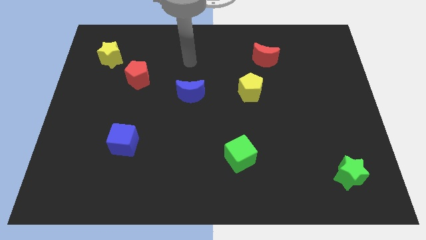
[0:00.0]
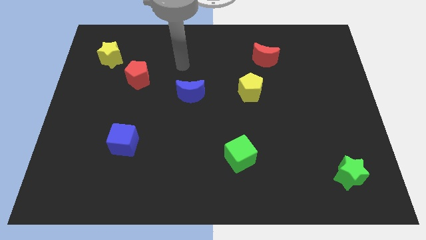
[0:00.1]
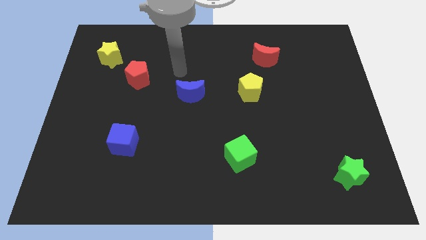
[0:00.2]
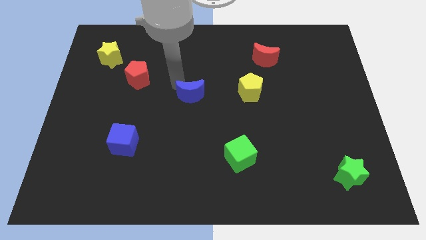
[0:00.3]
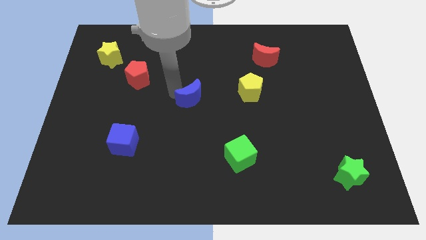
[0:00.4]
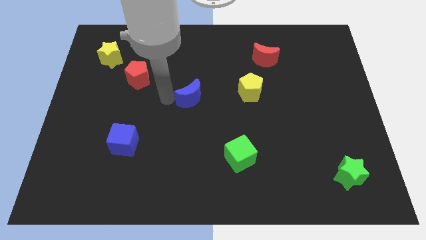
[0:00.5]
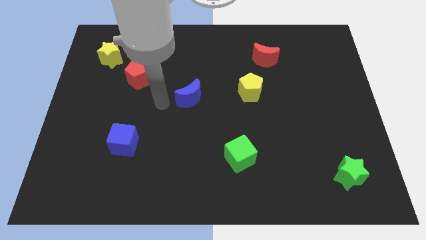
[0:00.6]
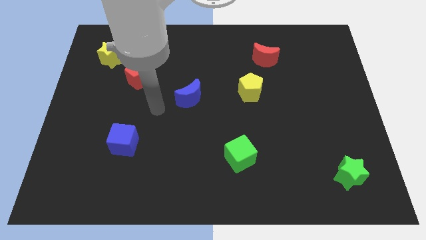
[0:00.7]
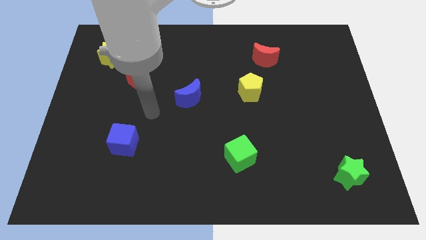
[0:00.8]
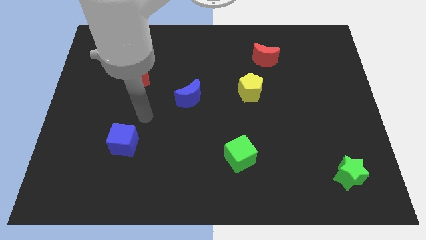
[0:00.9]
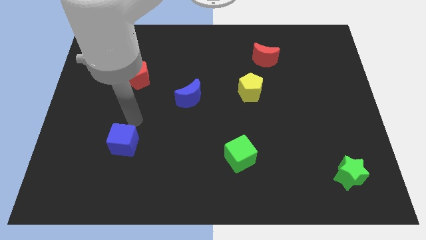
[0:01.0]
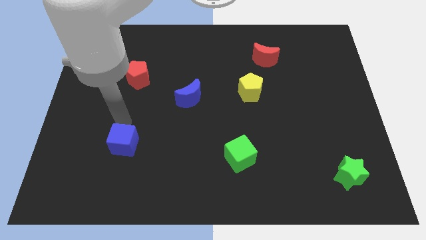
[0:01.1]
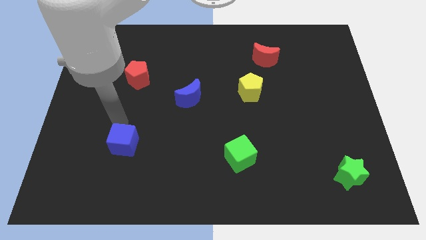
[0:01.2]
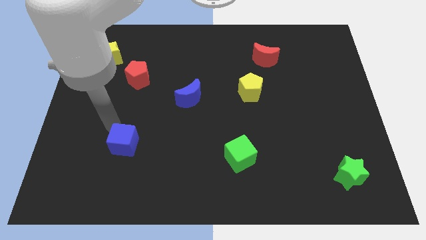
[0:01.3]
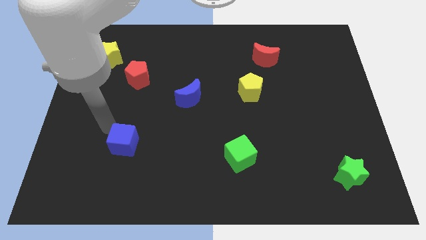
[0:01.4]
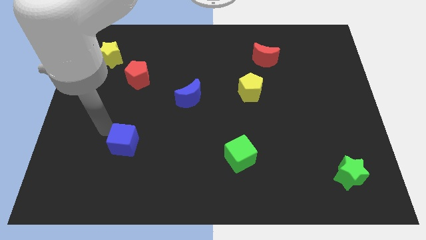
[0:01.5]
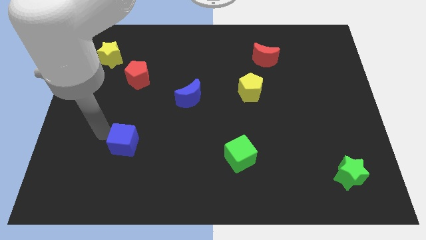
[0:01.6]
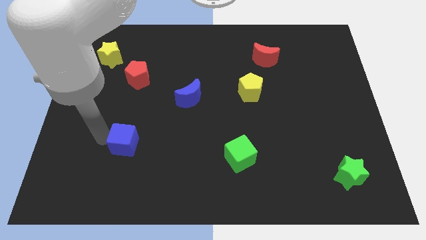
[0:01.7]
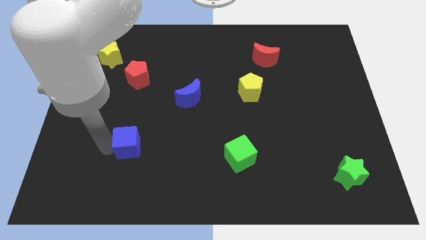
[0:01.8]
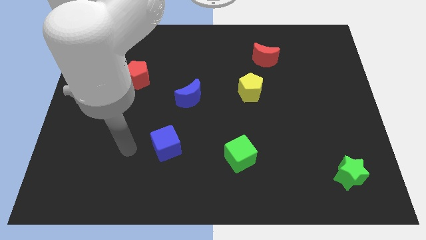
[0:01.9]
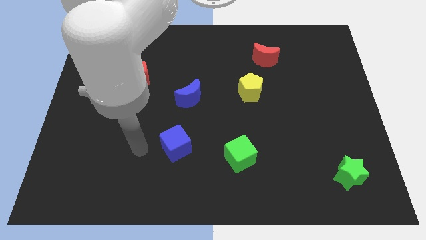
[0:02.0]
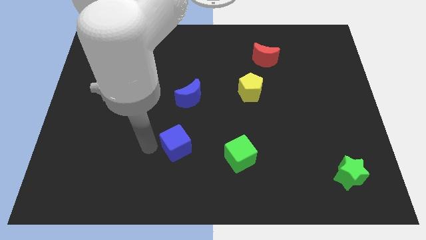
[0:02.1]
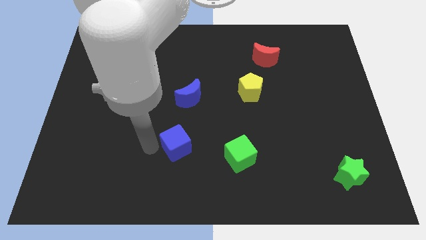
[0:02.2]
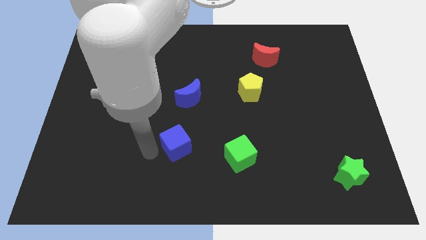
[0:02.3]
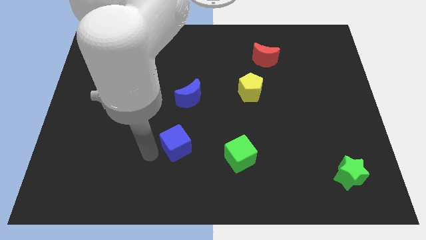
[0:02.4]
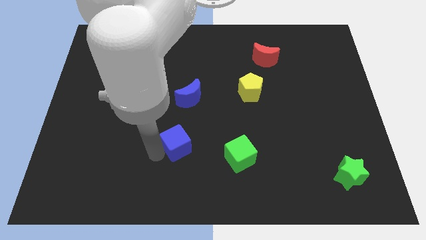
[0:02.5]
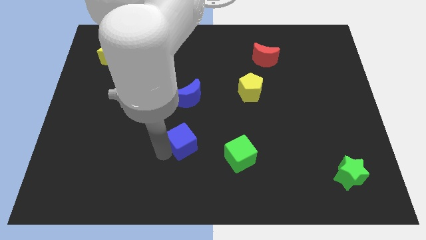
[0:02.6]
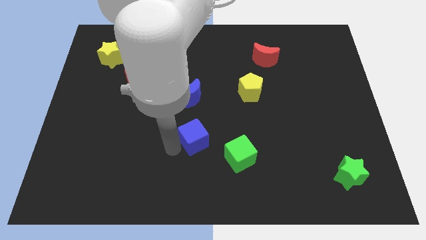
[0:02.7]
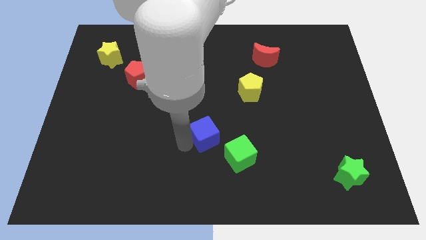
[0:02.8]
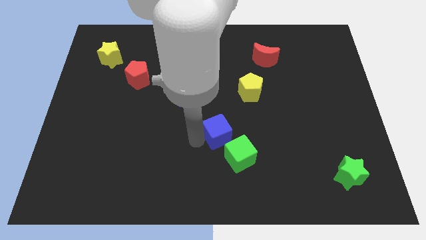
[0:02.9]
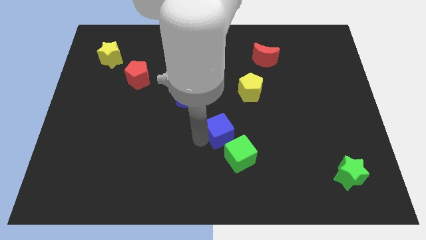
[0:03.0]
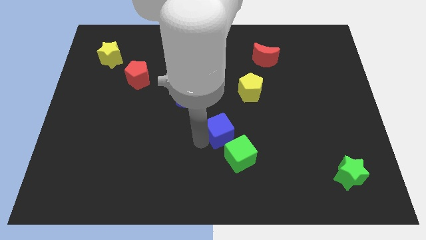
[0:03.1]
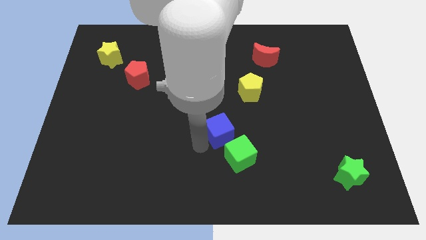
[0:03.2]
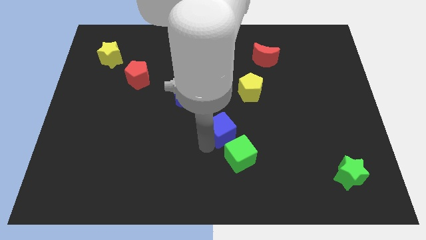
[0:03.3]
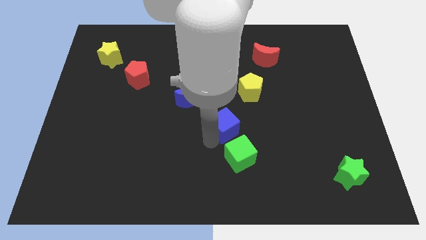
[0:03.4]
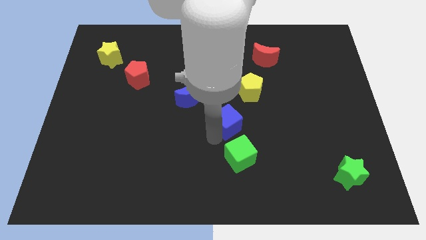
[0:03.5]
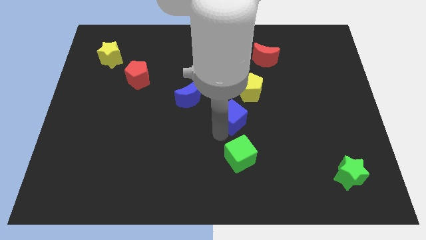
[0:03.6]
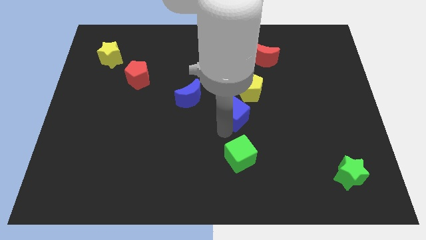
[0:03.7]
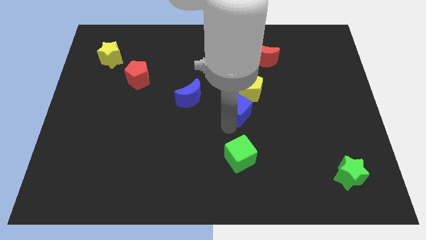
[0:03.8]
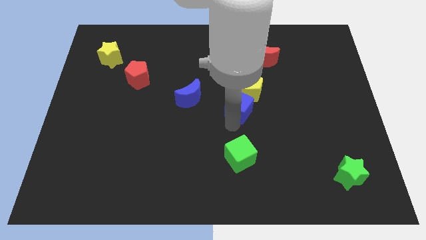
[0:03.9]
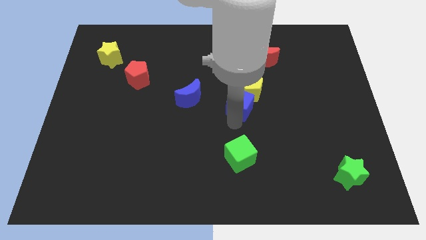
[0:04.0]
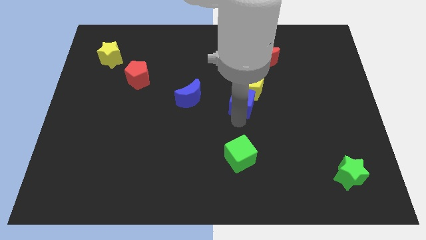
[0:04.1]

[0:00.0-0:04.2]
put the blue cube close to the yellow pentagon

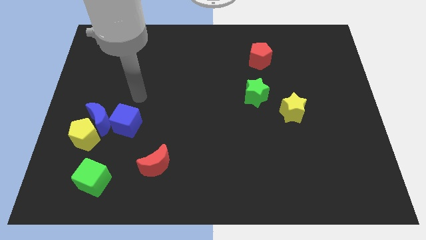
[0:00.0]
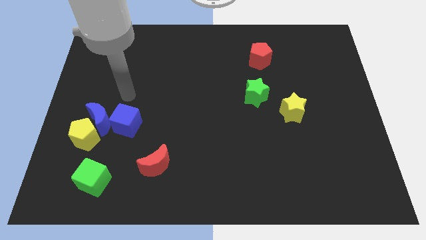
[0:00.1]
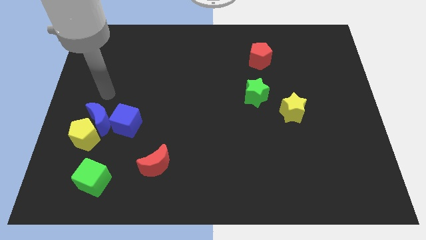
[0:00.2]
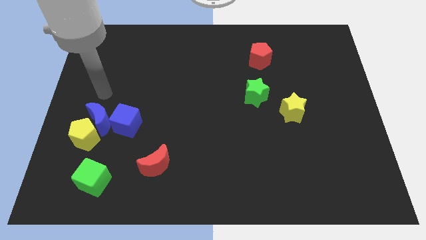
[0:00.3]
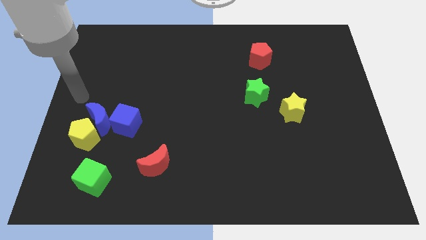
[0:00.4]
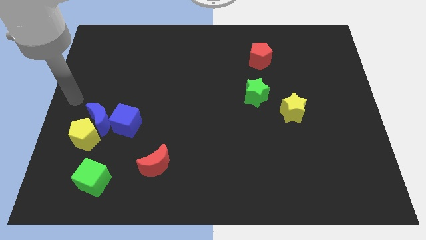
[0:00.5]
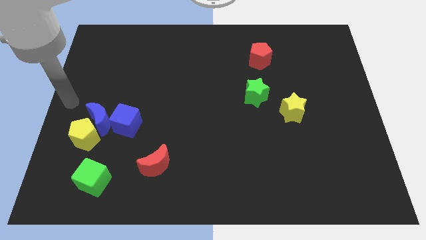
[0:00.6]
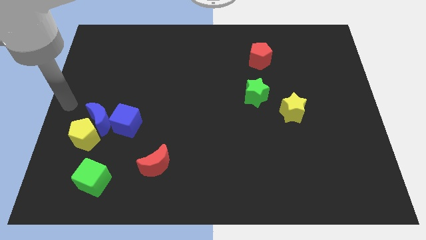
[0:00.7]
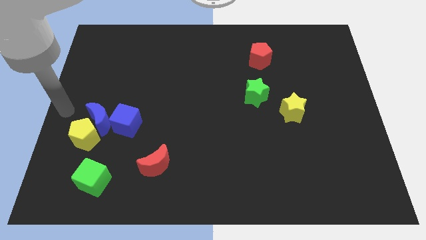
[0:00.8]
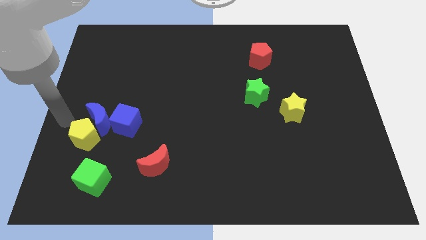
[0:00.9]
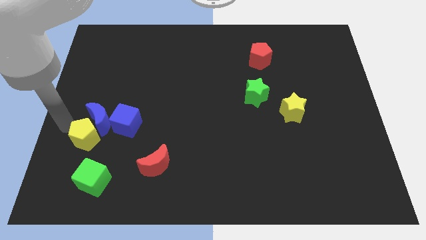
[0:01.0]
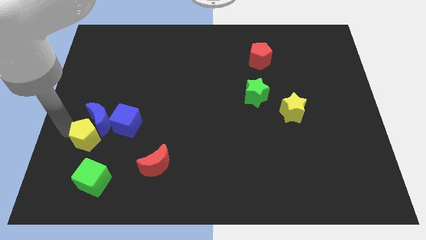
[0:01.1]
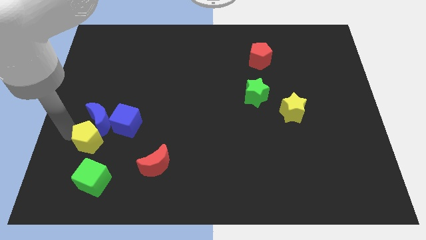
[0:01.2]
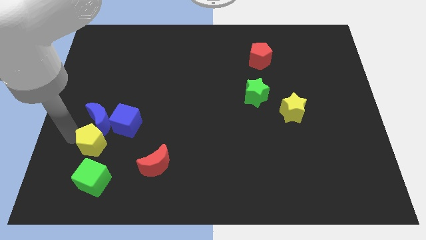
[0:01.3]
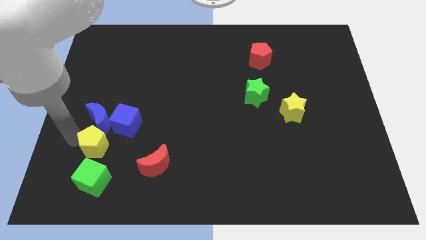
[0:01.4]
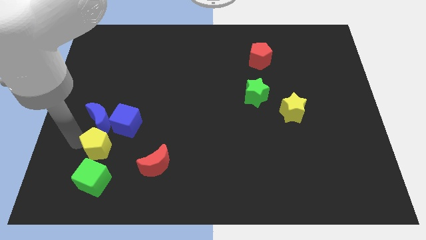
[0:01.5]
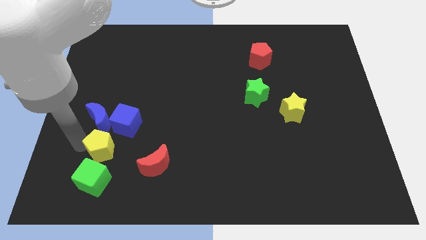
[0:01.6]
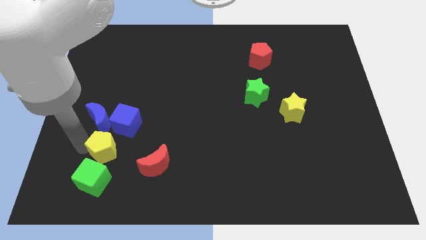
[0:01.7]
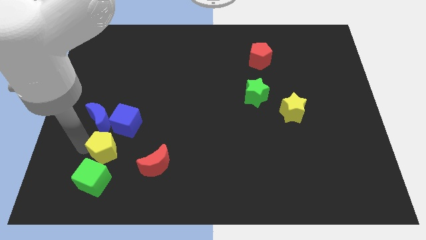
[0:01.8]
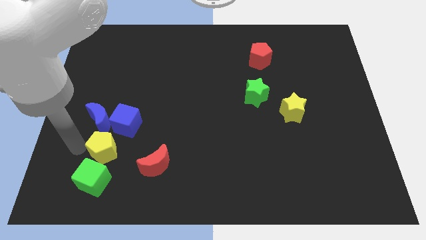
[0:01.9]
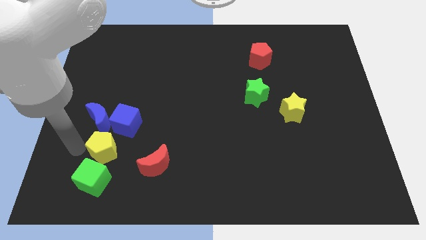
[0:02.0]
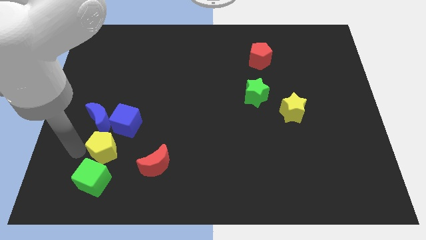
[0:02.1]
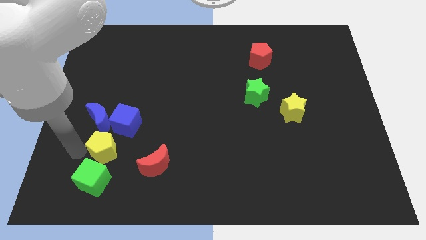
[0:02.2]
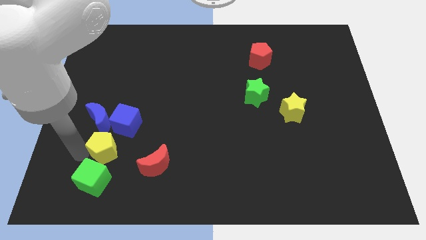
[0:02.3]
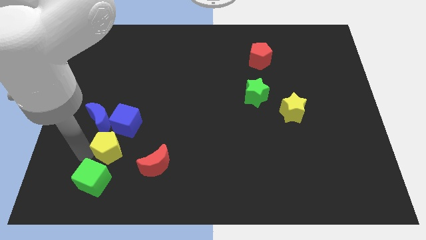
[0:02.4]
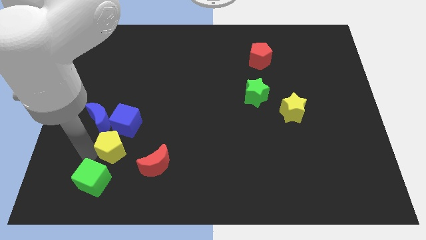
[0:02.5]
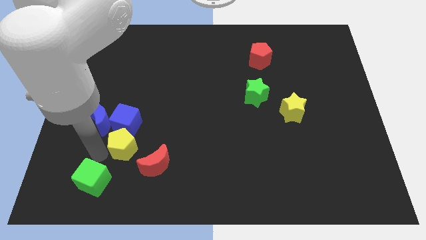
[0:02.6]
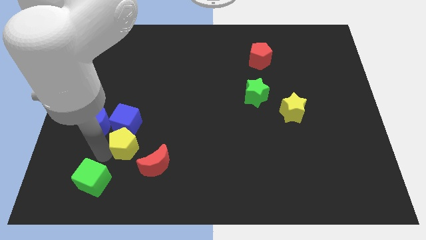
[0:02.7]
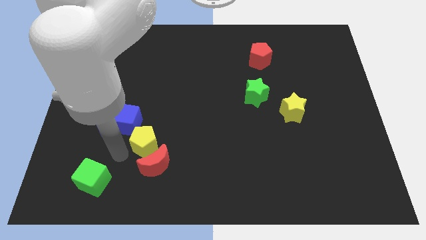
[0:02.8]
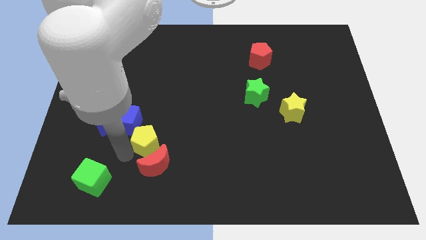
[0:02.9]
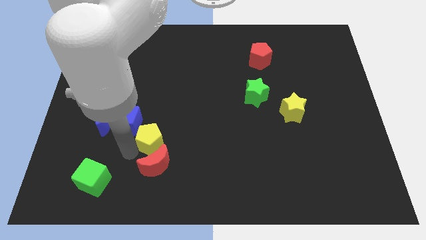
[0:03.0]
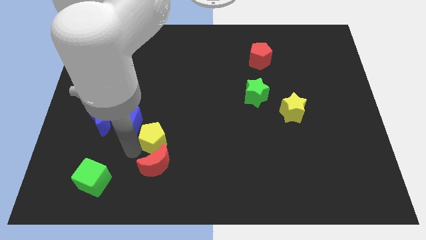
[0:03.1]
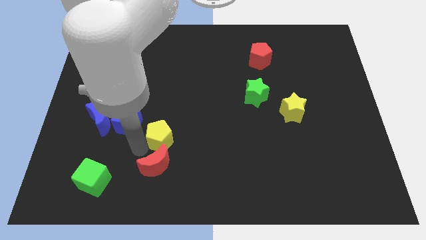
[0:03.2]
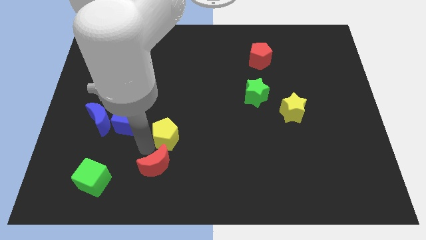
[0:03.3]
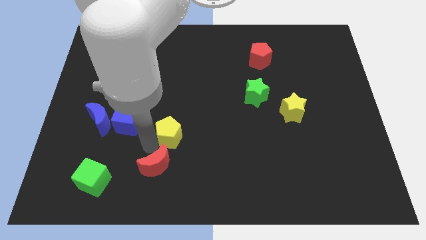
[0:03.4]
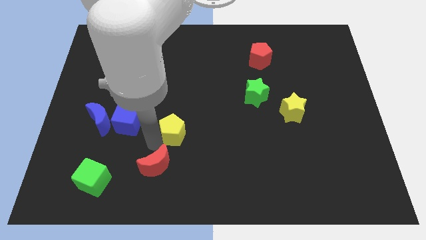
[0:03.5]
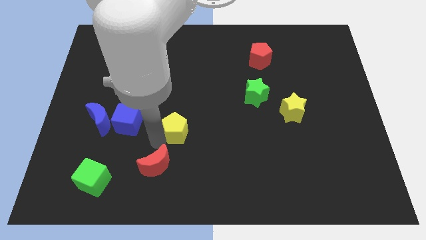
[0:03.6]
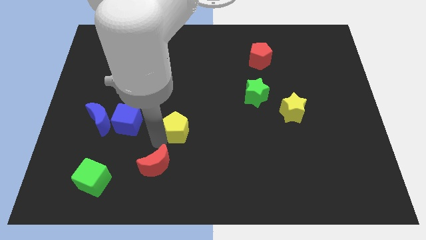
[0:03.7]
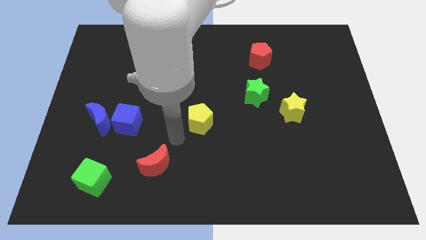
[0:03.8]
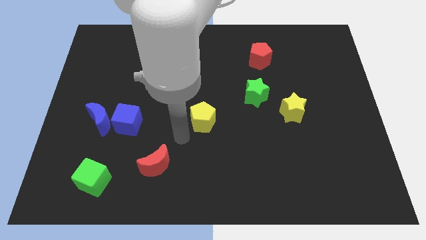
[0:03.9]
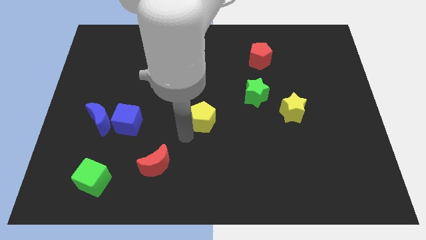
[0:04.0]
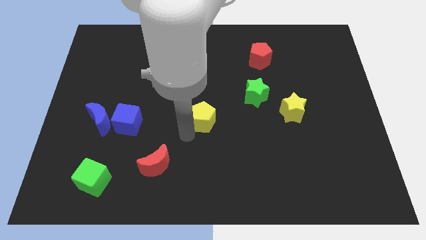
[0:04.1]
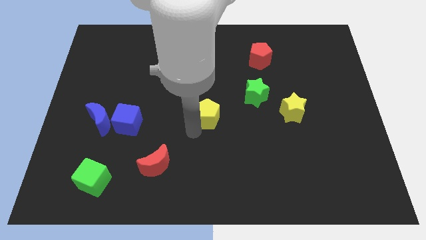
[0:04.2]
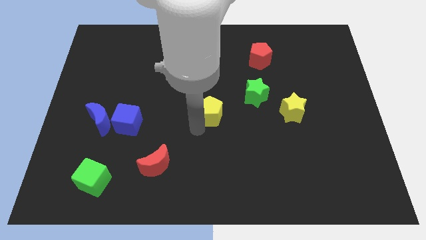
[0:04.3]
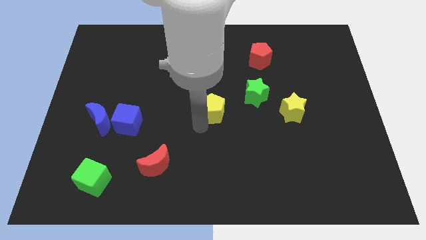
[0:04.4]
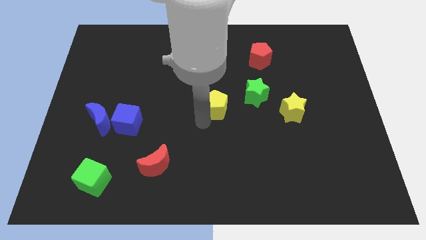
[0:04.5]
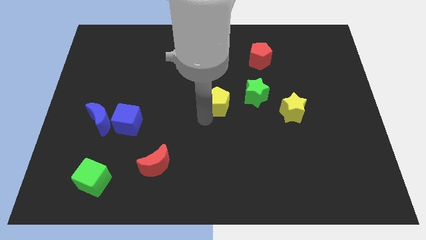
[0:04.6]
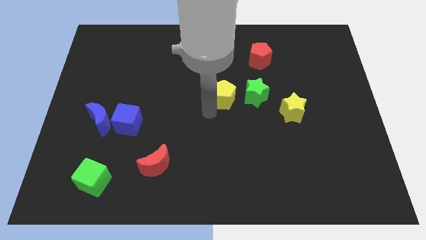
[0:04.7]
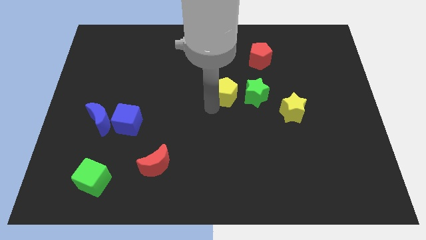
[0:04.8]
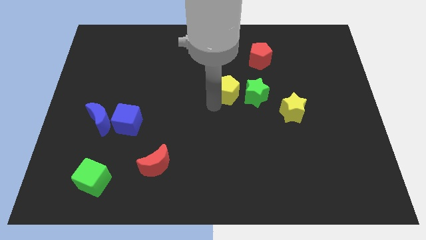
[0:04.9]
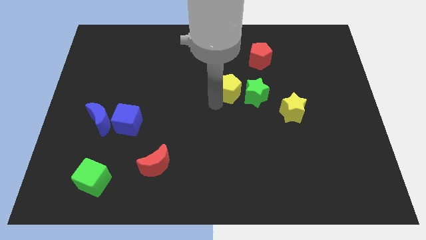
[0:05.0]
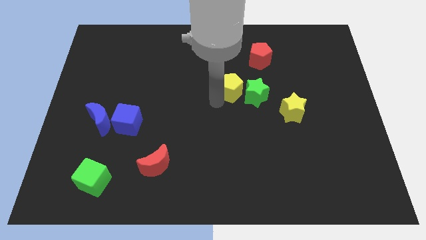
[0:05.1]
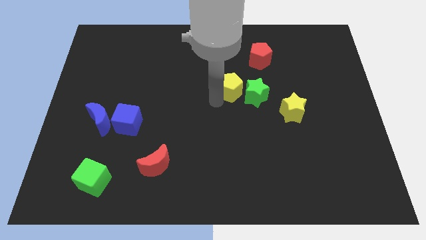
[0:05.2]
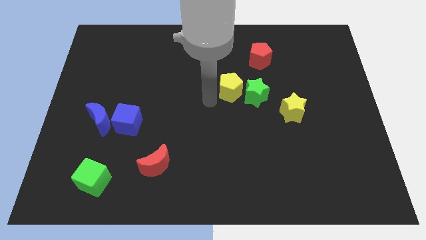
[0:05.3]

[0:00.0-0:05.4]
put the yellow pentagon close to the green star
